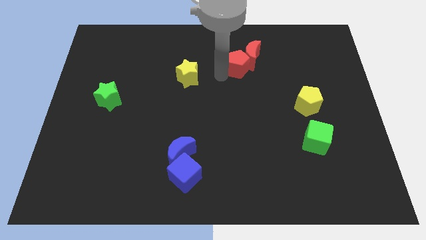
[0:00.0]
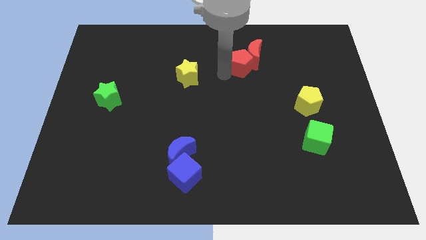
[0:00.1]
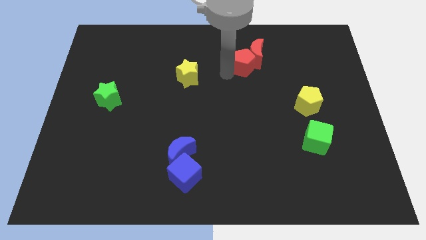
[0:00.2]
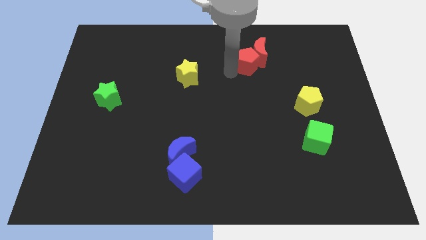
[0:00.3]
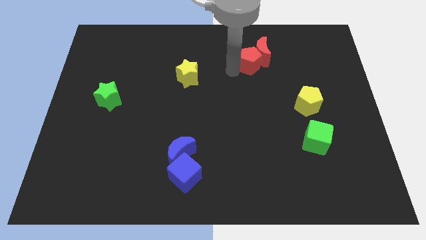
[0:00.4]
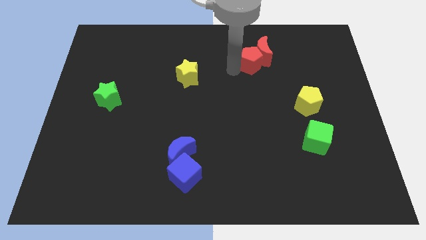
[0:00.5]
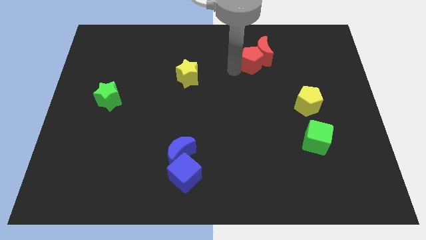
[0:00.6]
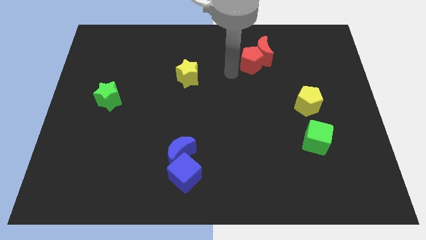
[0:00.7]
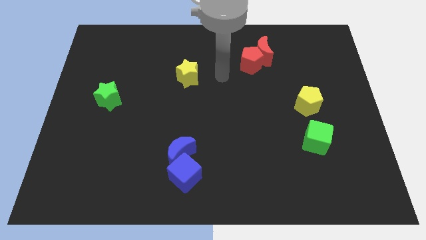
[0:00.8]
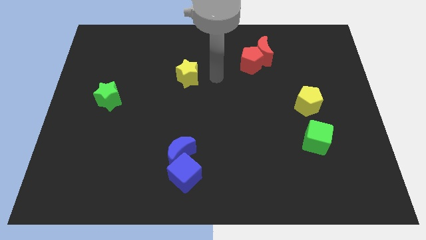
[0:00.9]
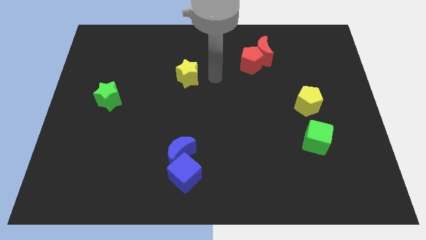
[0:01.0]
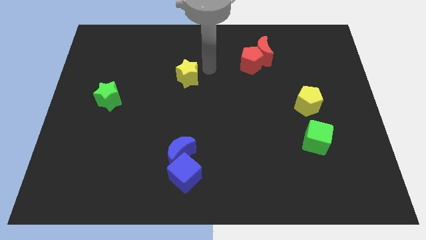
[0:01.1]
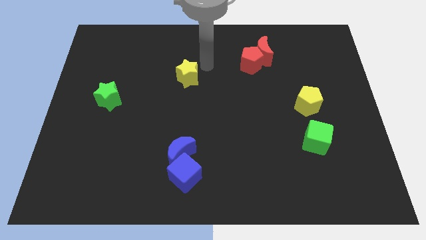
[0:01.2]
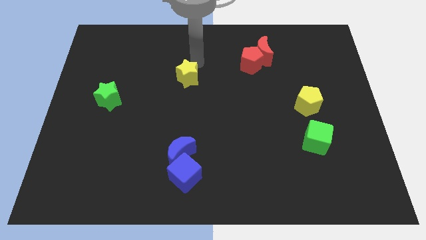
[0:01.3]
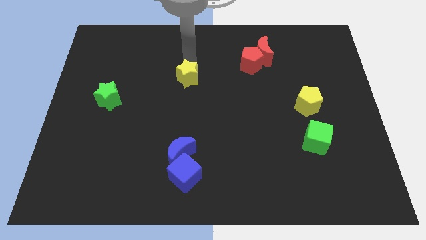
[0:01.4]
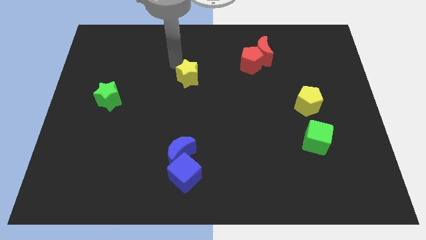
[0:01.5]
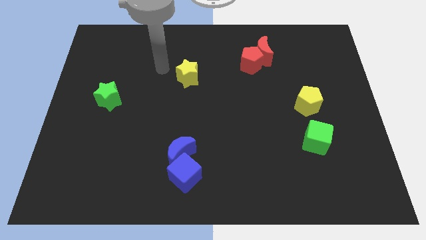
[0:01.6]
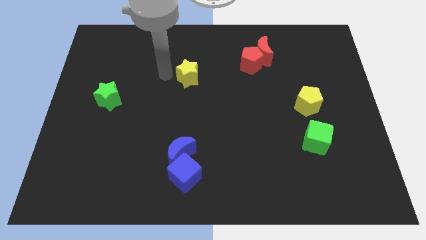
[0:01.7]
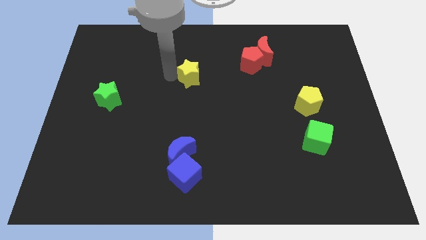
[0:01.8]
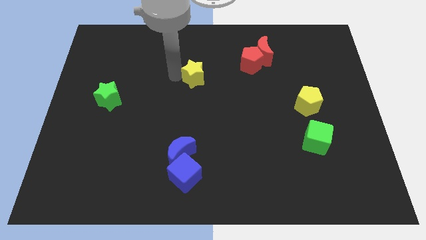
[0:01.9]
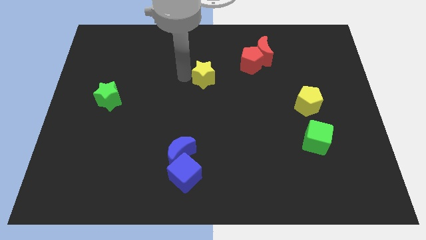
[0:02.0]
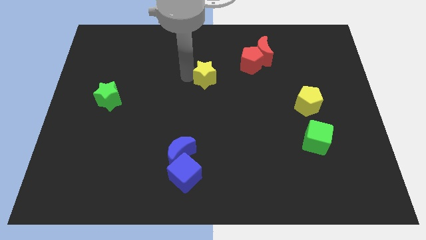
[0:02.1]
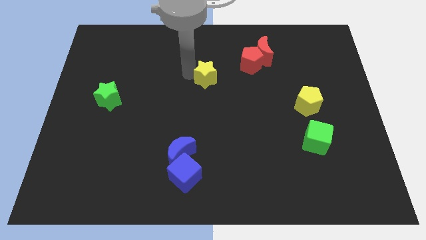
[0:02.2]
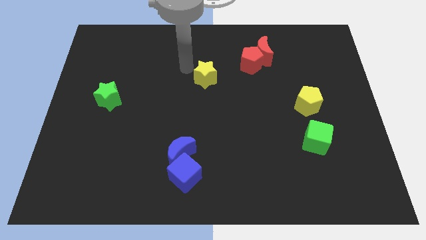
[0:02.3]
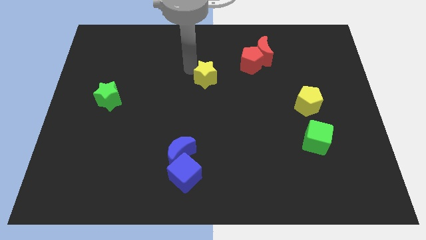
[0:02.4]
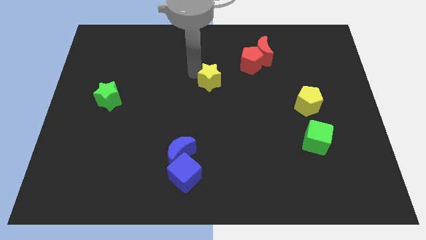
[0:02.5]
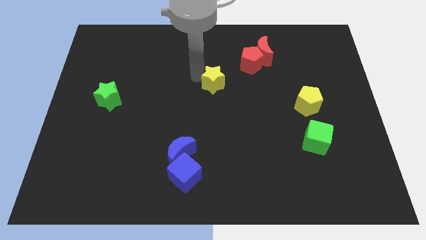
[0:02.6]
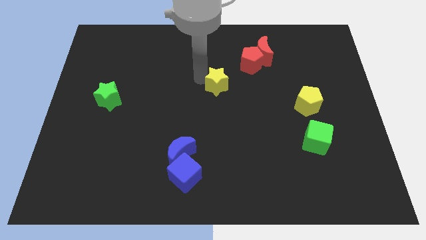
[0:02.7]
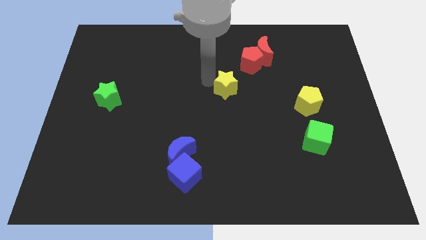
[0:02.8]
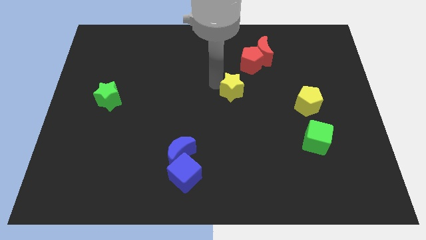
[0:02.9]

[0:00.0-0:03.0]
move yellow star towards yellow pentagon

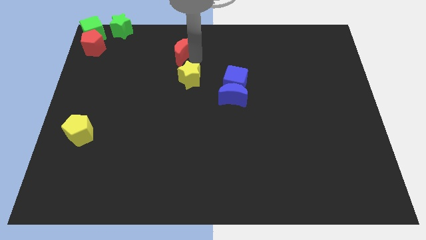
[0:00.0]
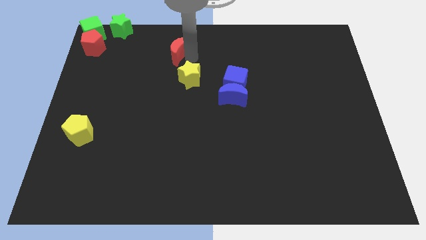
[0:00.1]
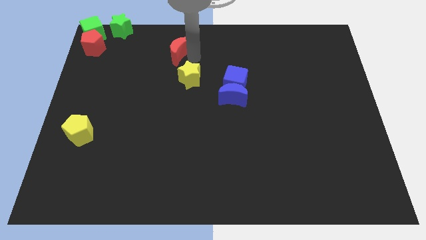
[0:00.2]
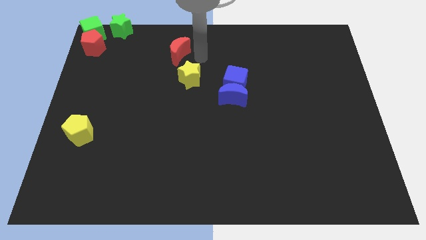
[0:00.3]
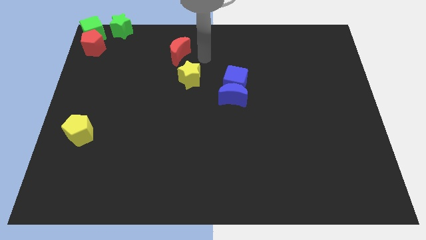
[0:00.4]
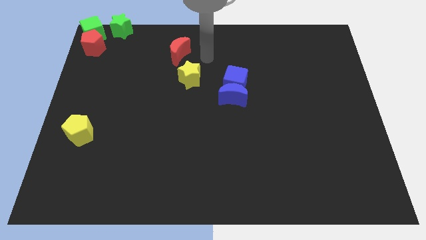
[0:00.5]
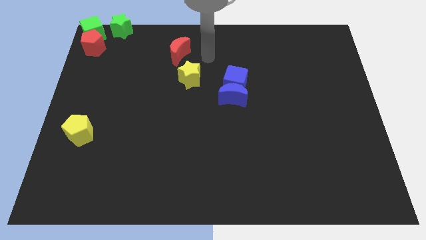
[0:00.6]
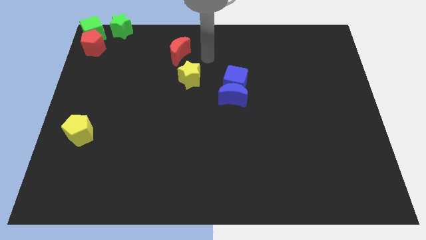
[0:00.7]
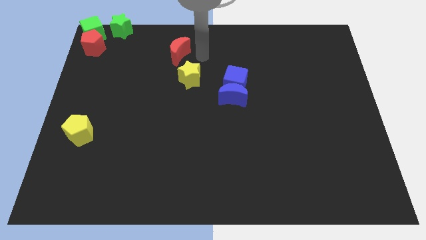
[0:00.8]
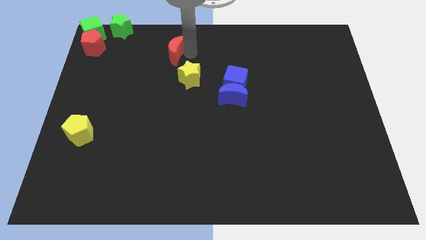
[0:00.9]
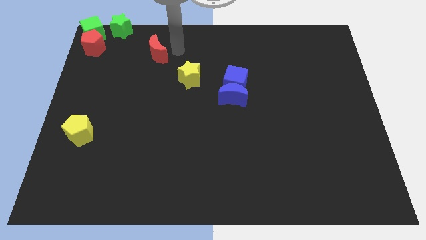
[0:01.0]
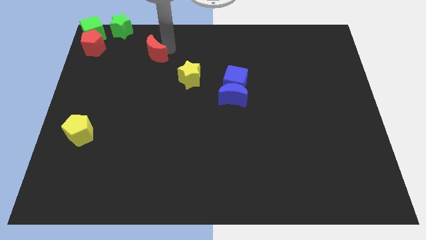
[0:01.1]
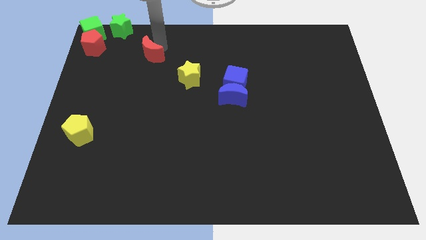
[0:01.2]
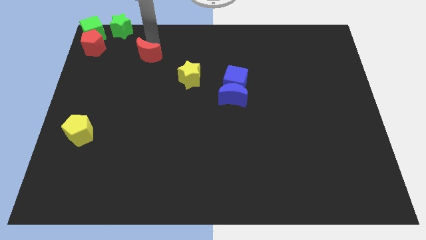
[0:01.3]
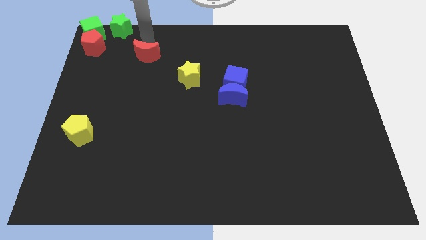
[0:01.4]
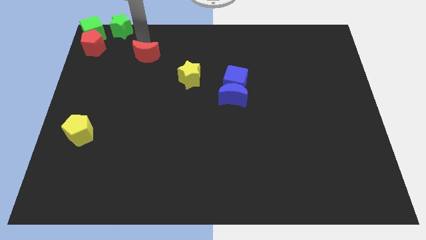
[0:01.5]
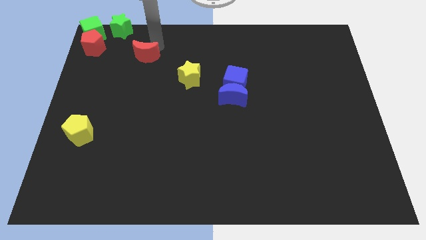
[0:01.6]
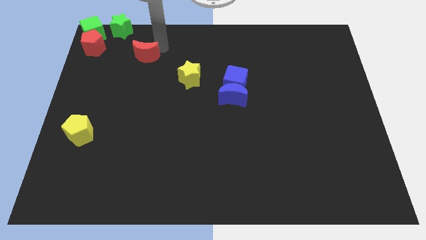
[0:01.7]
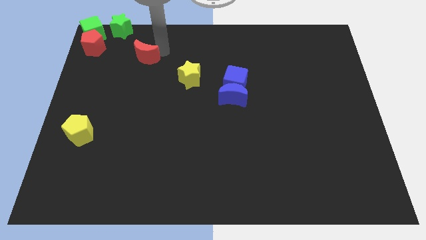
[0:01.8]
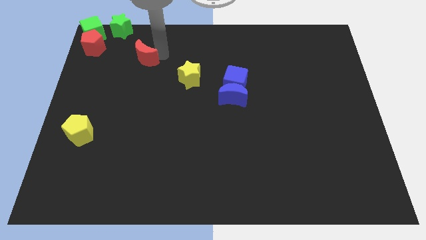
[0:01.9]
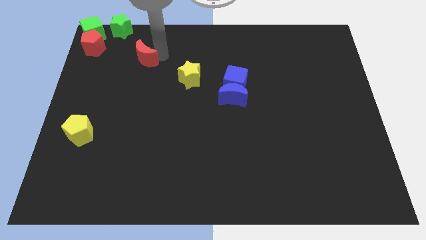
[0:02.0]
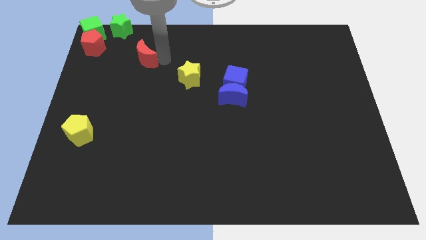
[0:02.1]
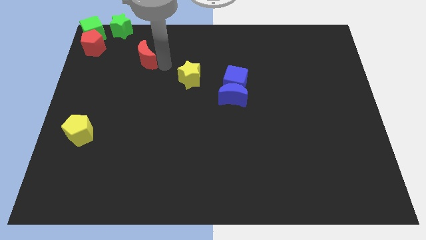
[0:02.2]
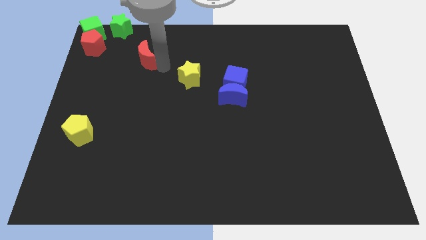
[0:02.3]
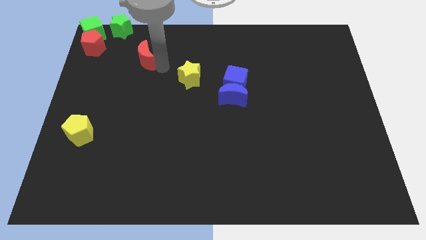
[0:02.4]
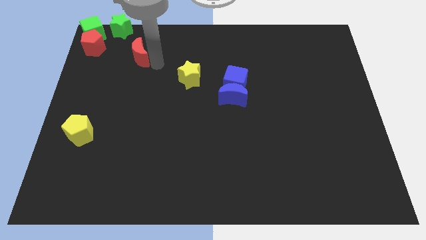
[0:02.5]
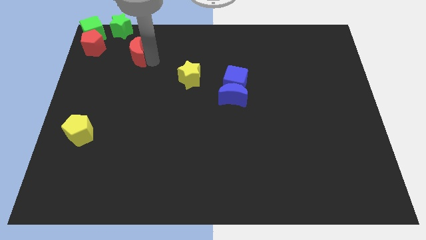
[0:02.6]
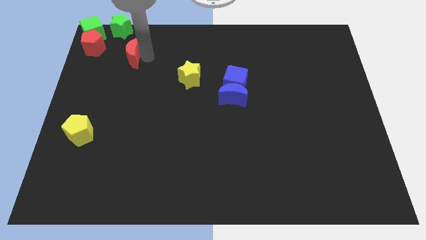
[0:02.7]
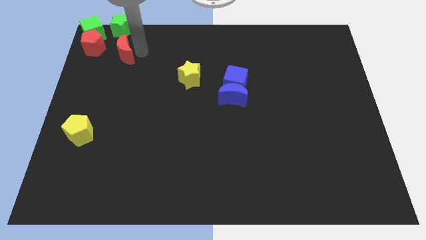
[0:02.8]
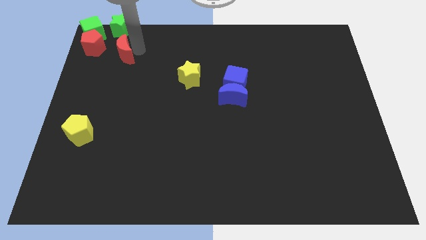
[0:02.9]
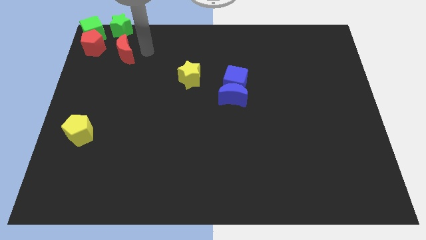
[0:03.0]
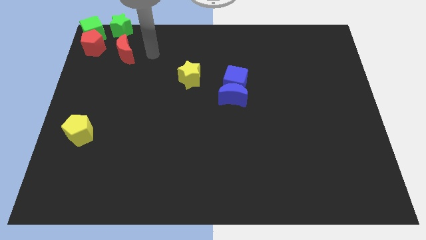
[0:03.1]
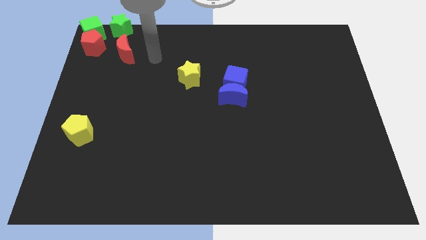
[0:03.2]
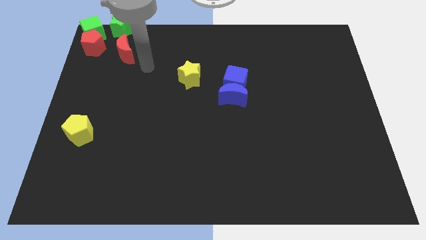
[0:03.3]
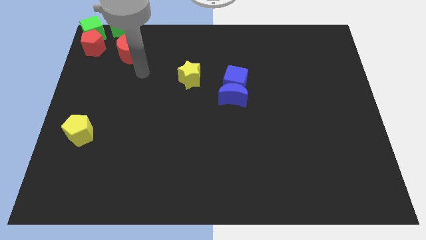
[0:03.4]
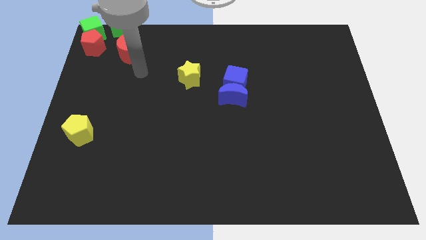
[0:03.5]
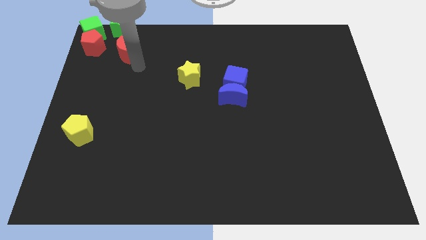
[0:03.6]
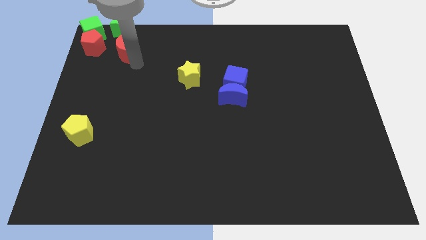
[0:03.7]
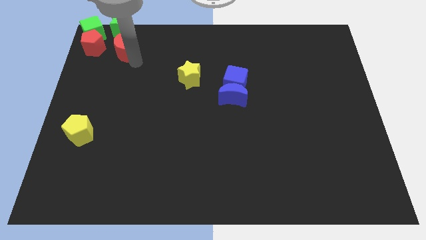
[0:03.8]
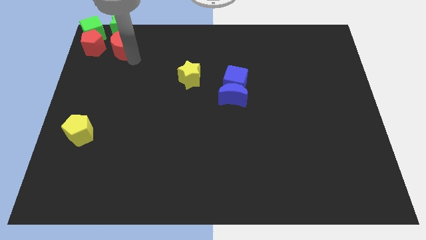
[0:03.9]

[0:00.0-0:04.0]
move the red crescent to the bottom of the green star

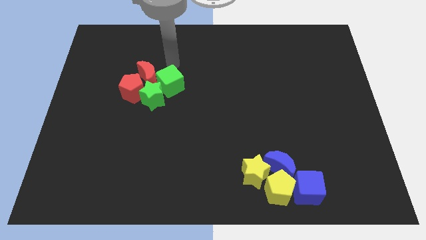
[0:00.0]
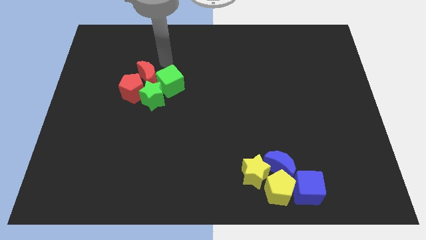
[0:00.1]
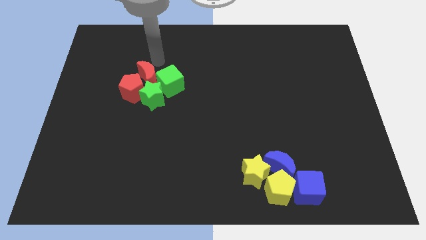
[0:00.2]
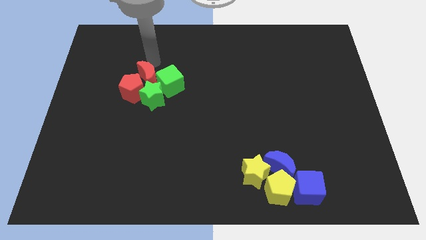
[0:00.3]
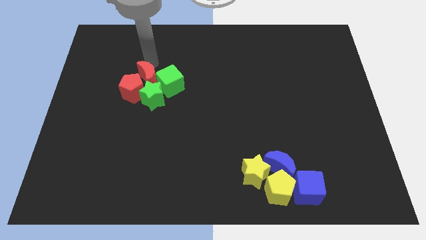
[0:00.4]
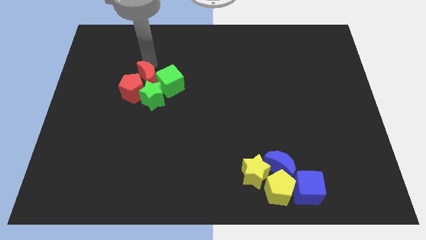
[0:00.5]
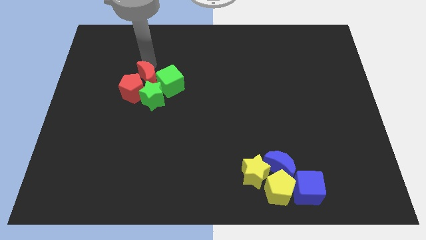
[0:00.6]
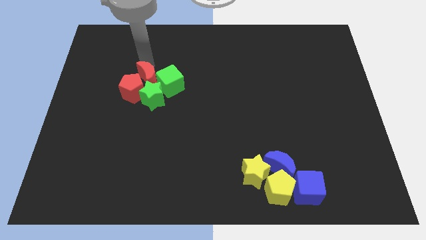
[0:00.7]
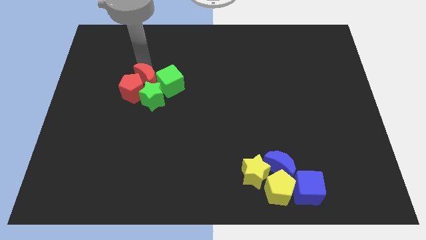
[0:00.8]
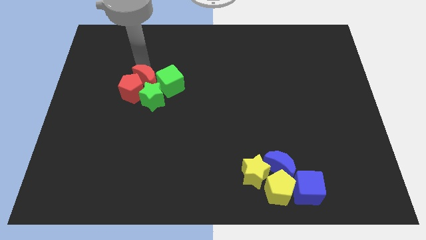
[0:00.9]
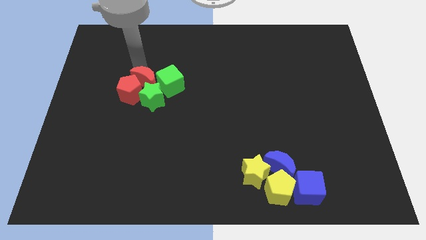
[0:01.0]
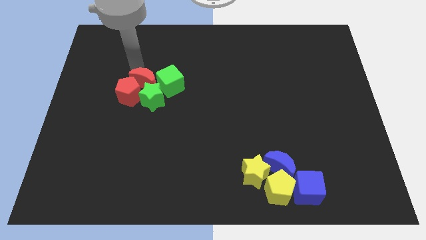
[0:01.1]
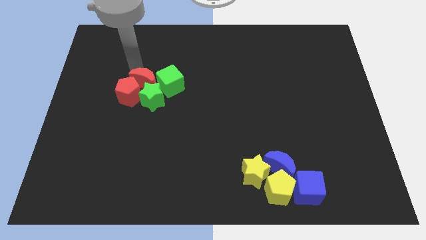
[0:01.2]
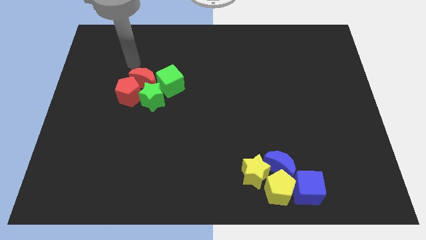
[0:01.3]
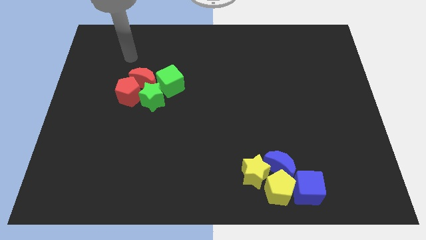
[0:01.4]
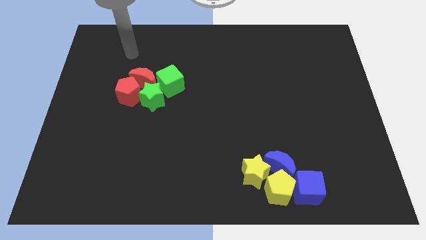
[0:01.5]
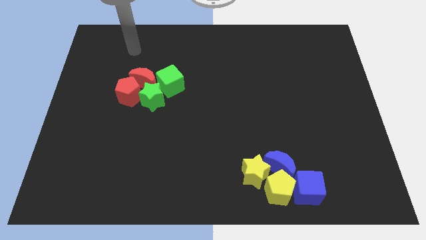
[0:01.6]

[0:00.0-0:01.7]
push the red crescent into the red pentagon and green star

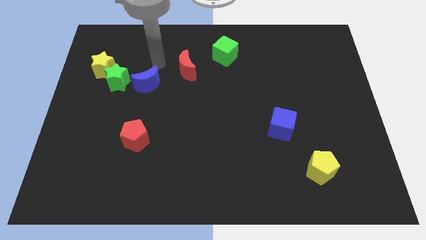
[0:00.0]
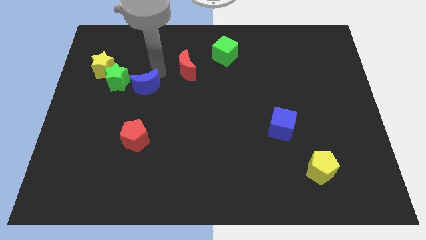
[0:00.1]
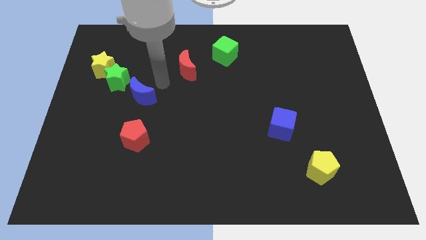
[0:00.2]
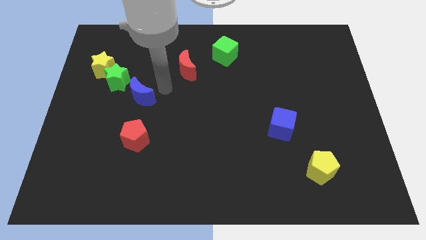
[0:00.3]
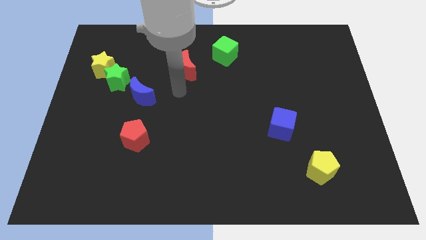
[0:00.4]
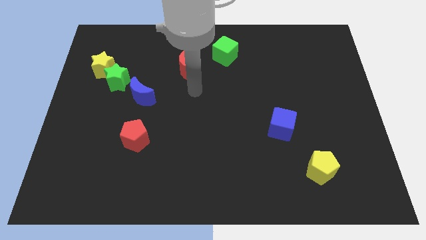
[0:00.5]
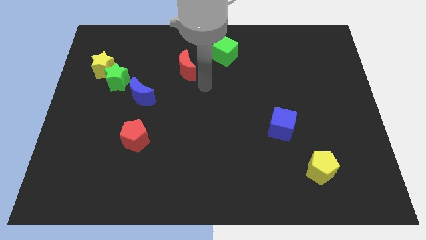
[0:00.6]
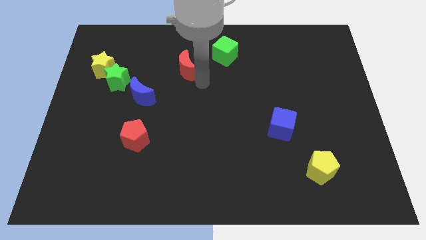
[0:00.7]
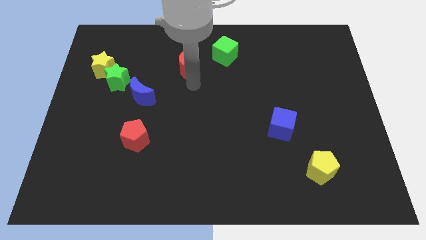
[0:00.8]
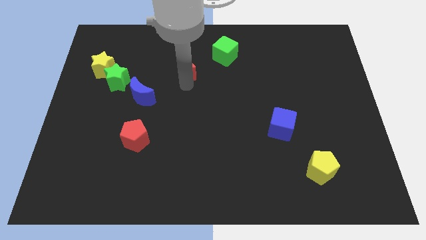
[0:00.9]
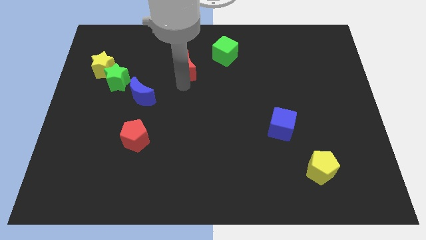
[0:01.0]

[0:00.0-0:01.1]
push blue moon diagonally below to the green star
